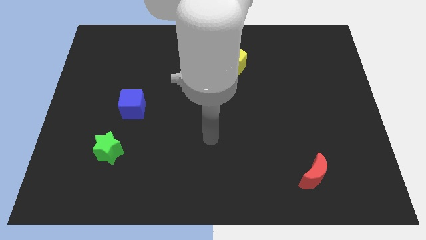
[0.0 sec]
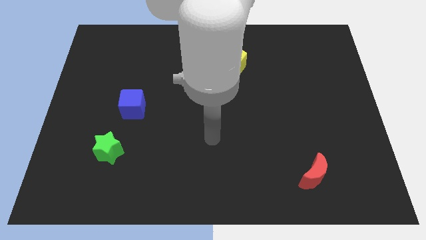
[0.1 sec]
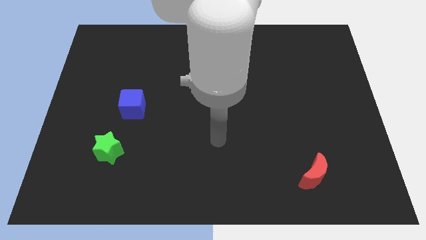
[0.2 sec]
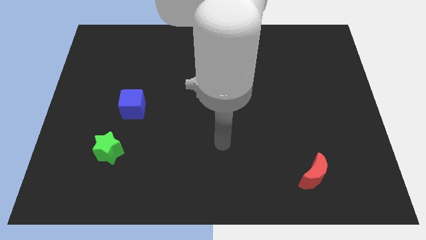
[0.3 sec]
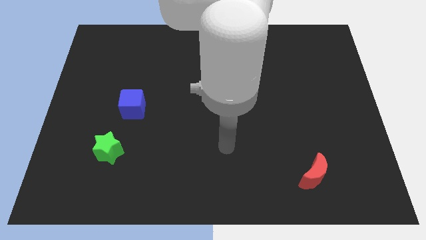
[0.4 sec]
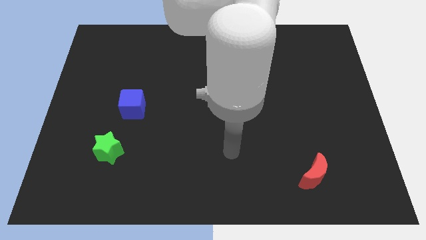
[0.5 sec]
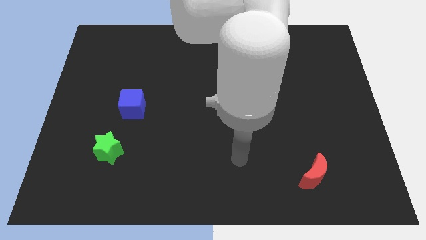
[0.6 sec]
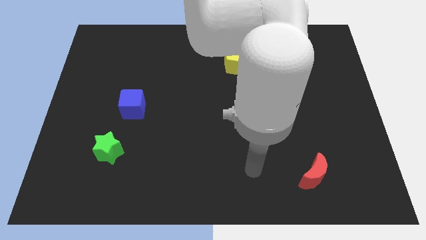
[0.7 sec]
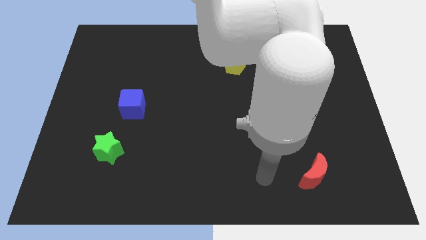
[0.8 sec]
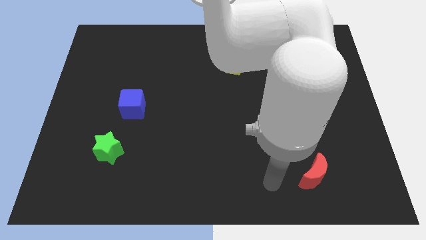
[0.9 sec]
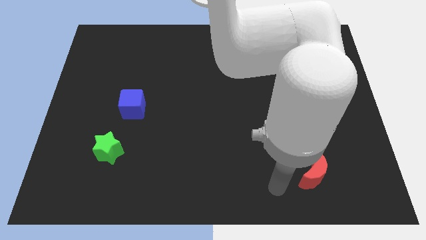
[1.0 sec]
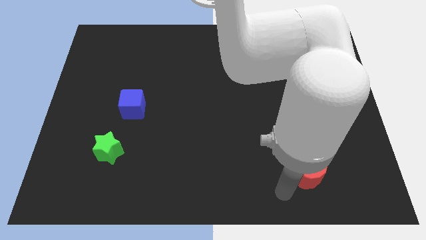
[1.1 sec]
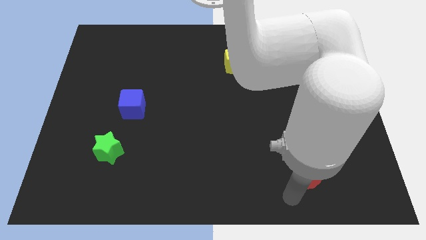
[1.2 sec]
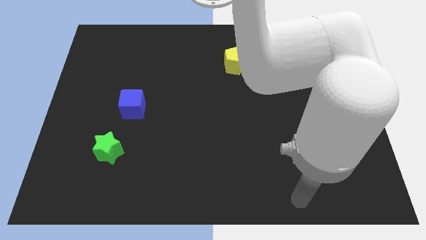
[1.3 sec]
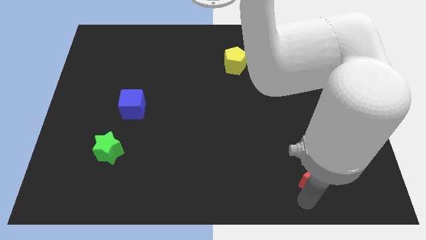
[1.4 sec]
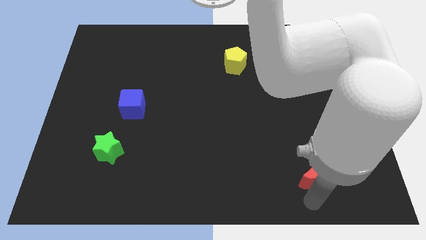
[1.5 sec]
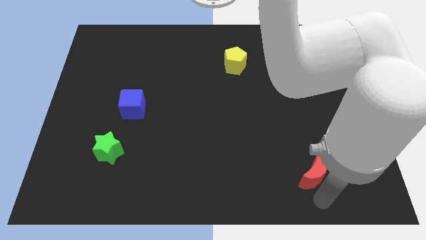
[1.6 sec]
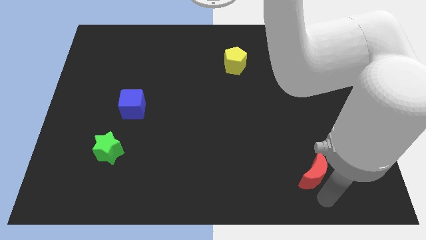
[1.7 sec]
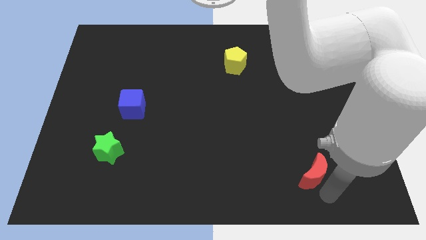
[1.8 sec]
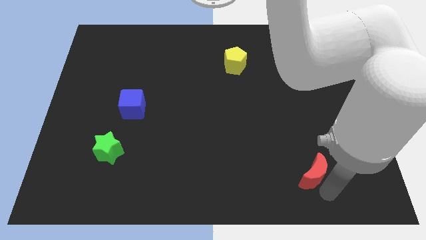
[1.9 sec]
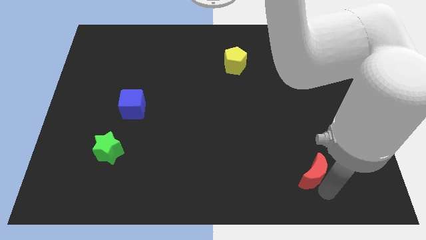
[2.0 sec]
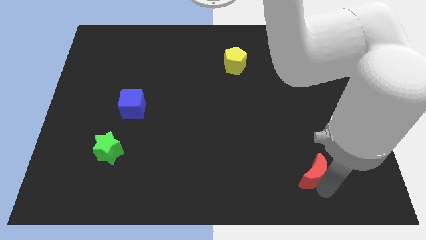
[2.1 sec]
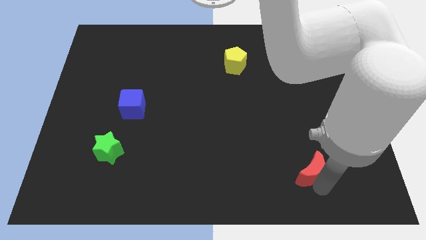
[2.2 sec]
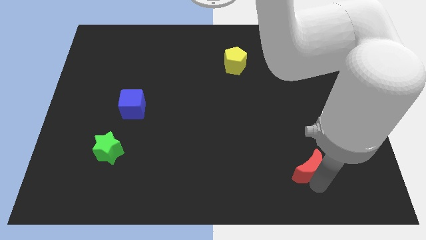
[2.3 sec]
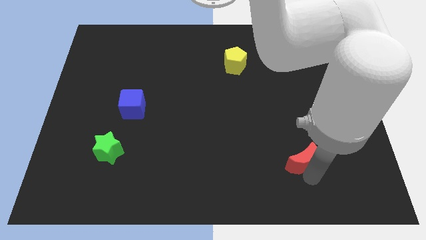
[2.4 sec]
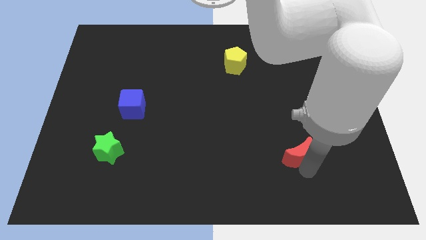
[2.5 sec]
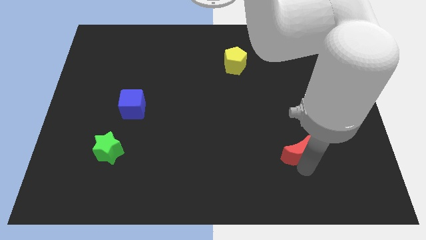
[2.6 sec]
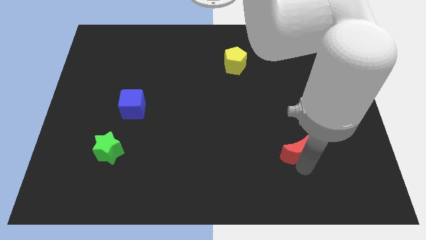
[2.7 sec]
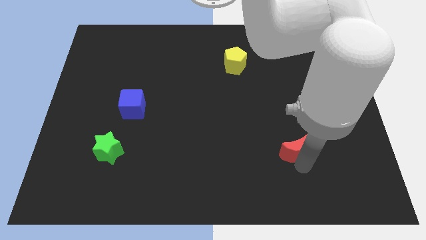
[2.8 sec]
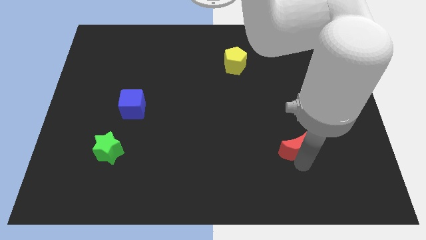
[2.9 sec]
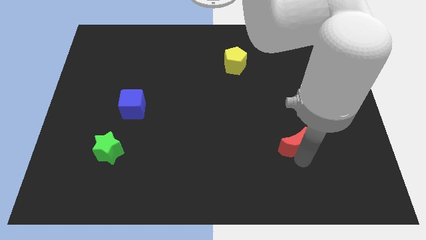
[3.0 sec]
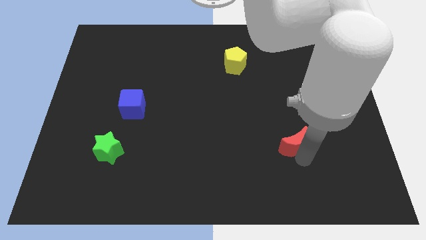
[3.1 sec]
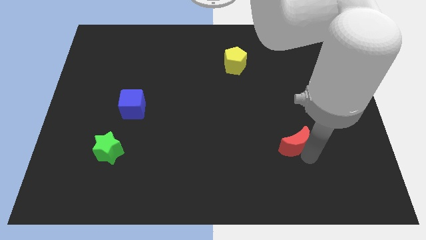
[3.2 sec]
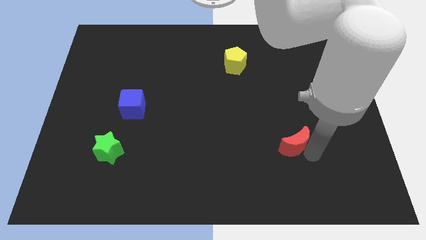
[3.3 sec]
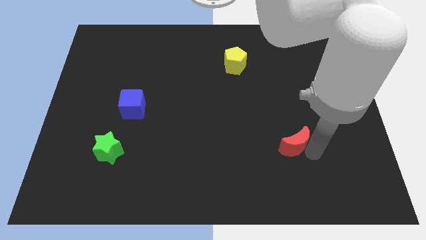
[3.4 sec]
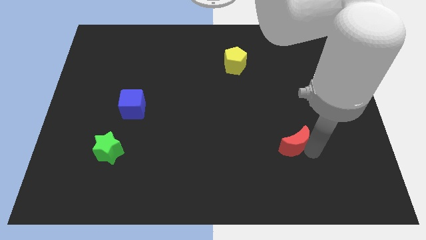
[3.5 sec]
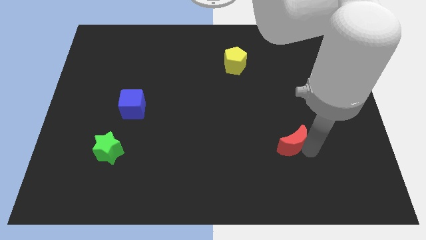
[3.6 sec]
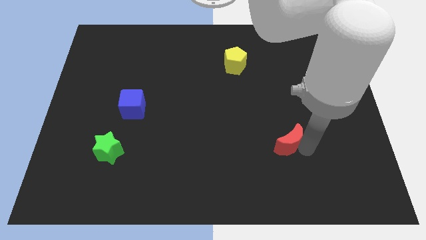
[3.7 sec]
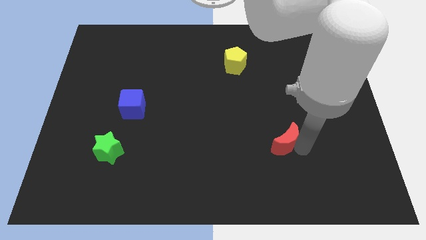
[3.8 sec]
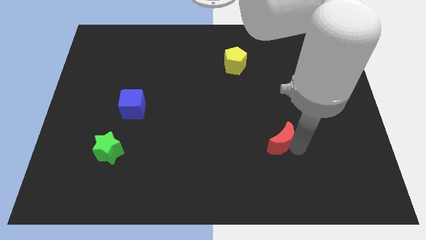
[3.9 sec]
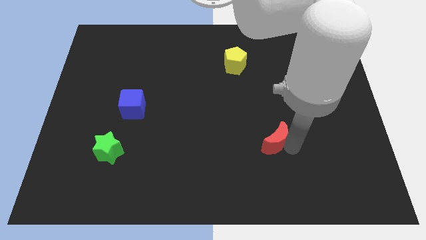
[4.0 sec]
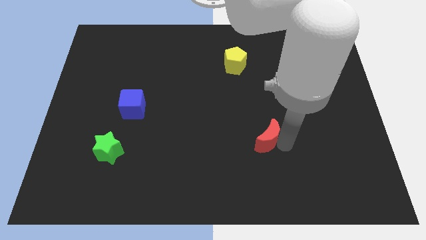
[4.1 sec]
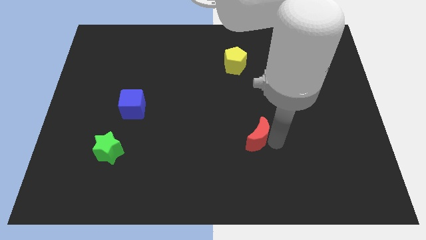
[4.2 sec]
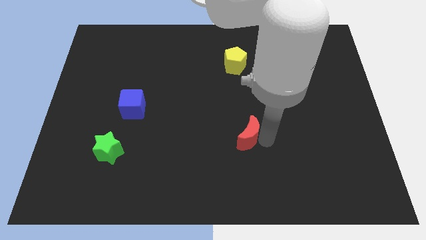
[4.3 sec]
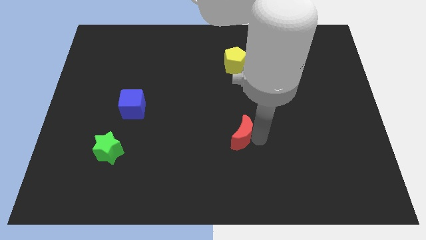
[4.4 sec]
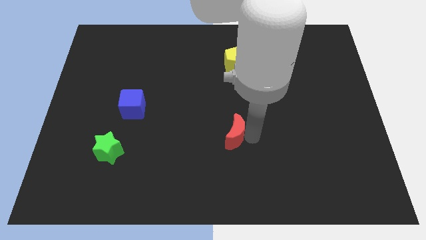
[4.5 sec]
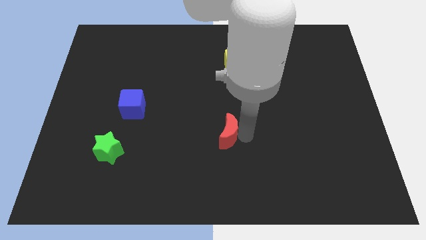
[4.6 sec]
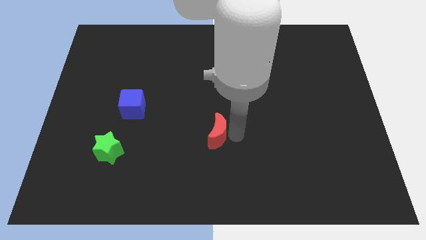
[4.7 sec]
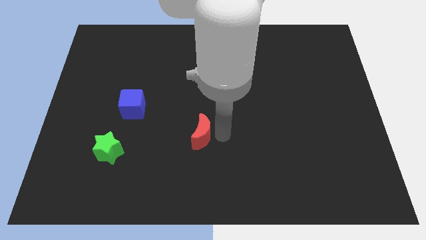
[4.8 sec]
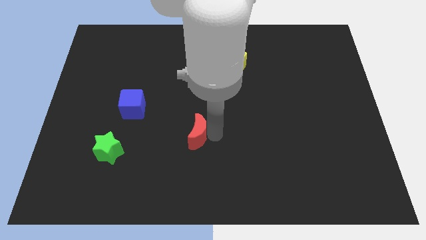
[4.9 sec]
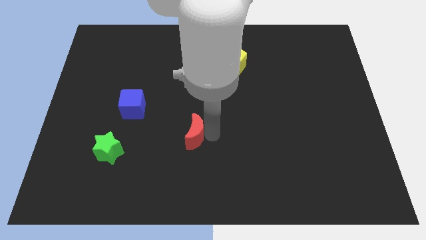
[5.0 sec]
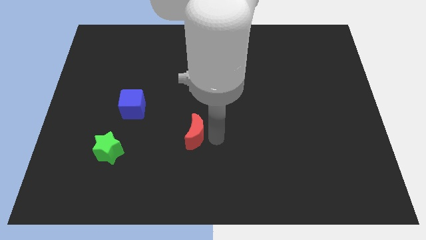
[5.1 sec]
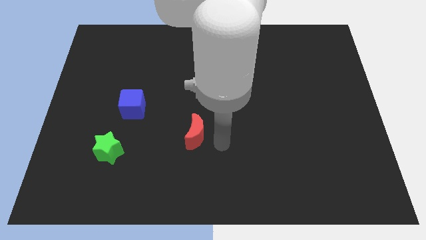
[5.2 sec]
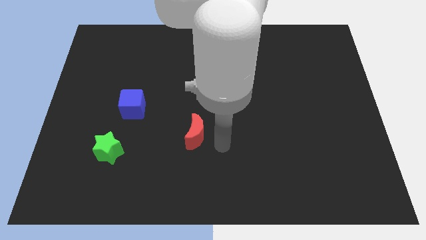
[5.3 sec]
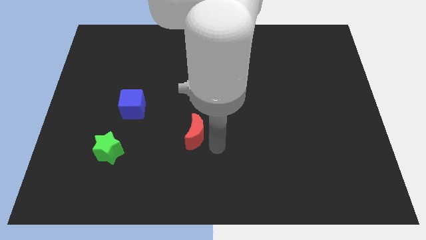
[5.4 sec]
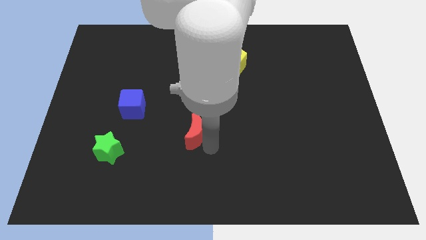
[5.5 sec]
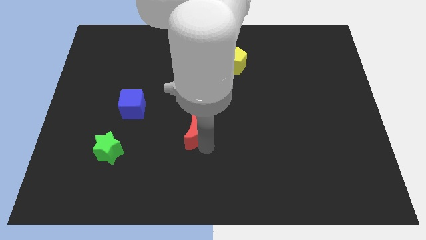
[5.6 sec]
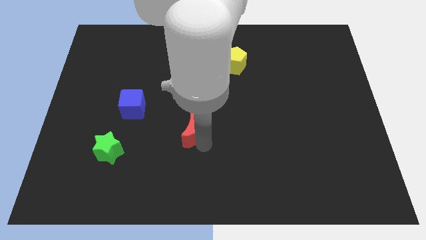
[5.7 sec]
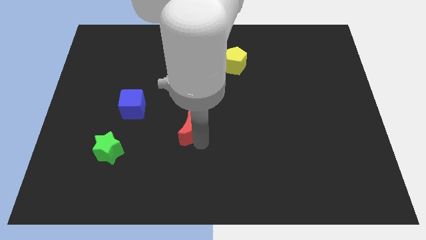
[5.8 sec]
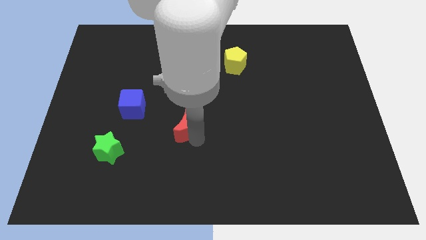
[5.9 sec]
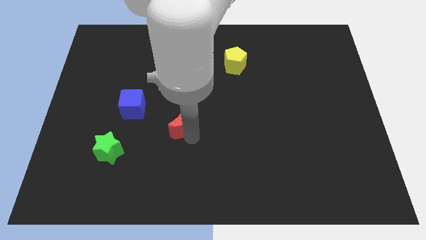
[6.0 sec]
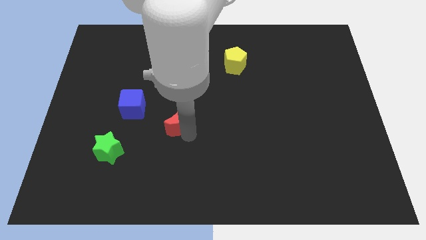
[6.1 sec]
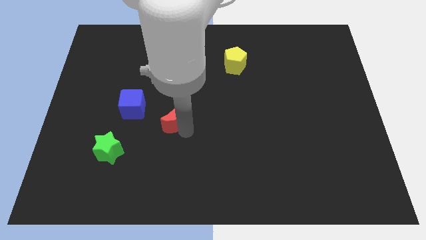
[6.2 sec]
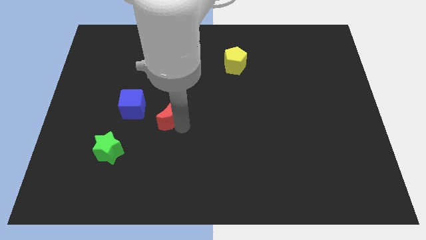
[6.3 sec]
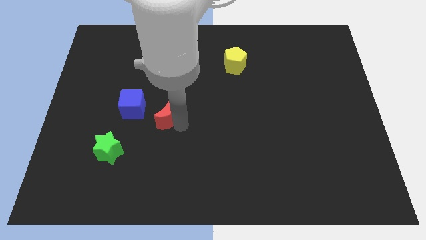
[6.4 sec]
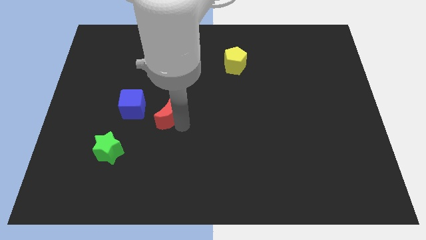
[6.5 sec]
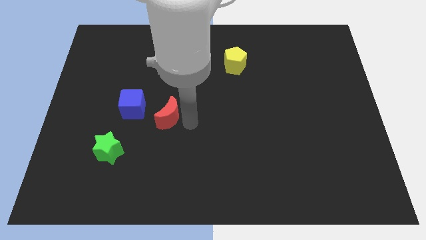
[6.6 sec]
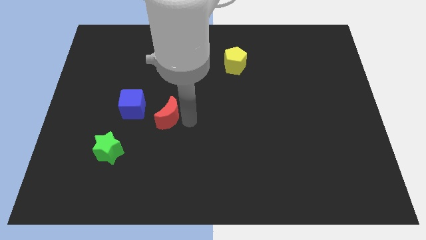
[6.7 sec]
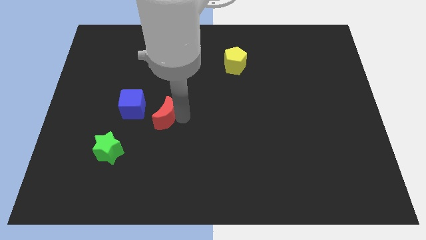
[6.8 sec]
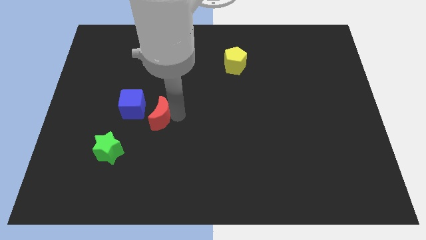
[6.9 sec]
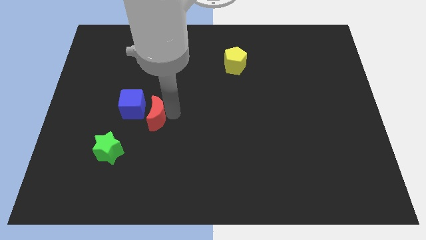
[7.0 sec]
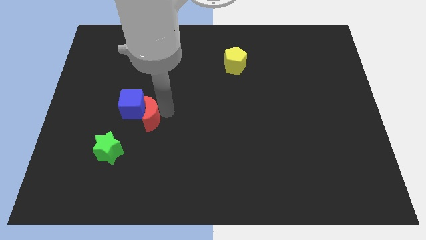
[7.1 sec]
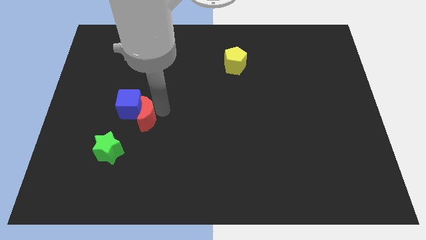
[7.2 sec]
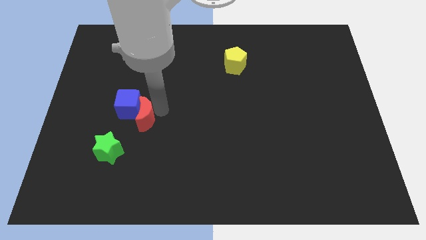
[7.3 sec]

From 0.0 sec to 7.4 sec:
put the red moon next to the cube

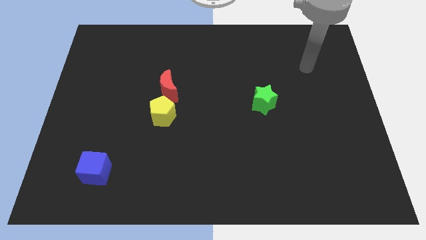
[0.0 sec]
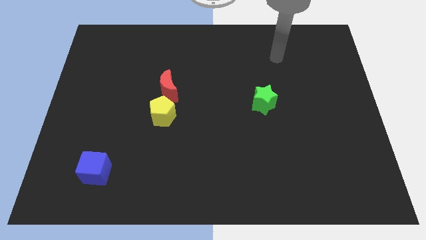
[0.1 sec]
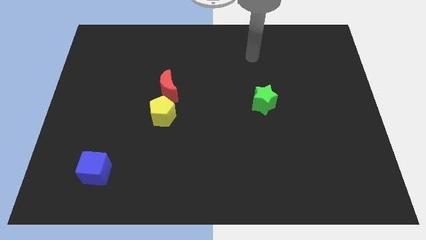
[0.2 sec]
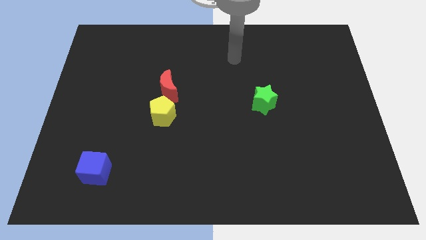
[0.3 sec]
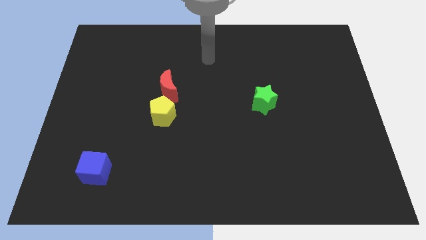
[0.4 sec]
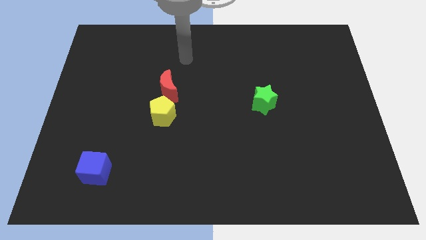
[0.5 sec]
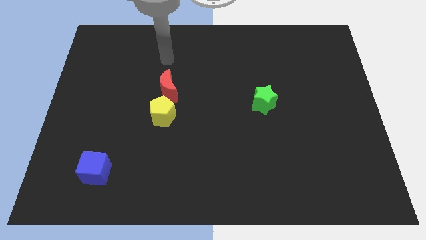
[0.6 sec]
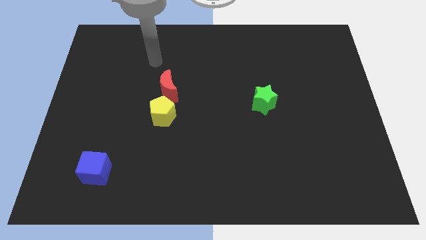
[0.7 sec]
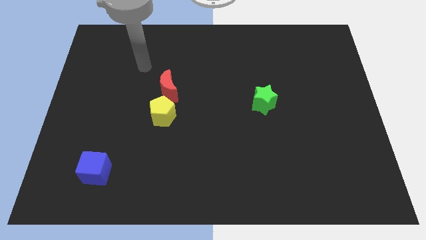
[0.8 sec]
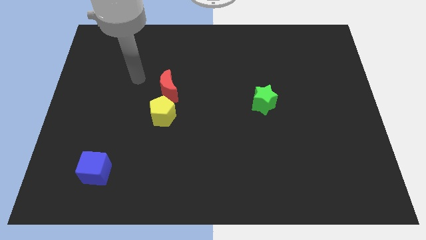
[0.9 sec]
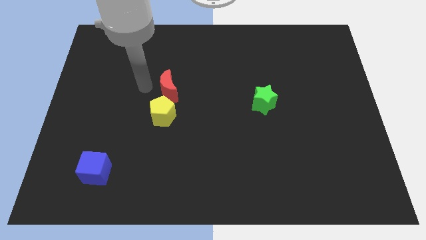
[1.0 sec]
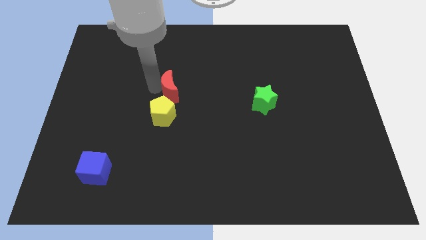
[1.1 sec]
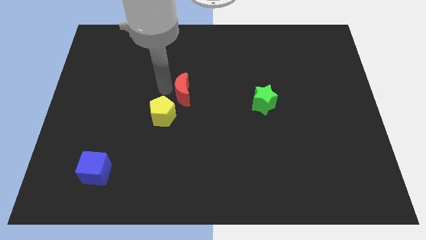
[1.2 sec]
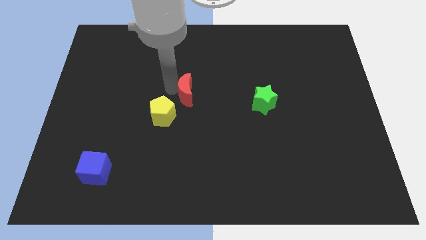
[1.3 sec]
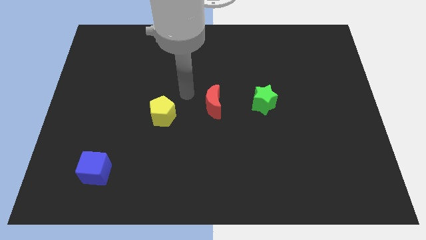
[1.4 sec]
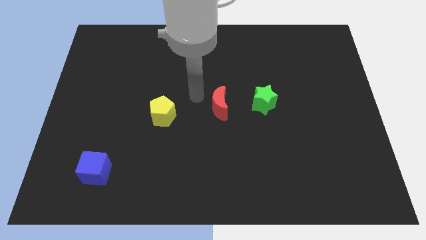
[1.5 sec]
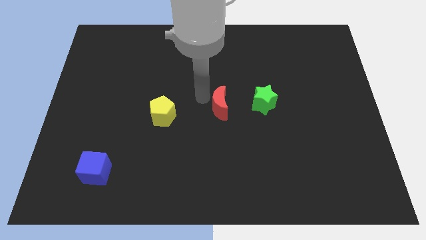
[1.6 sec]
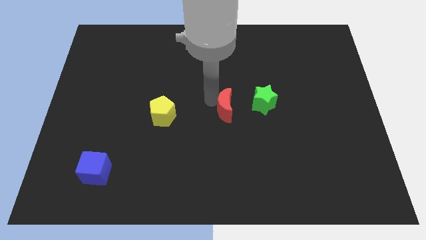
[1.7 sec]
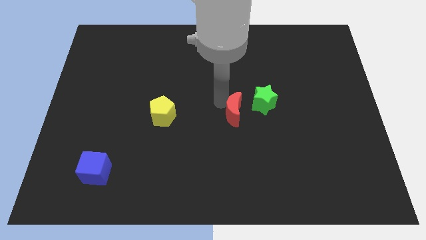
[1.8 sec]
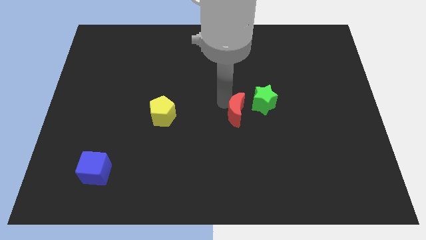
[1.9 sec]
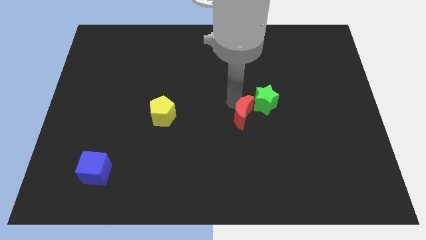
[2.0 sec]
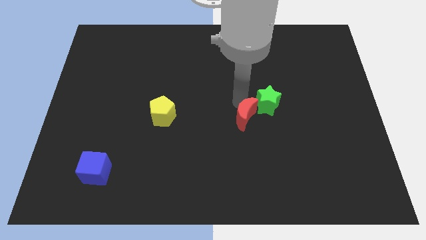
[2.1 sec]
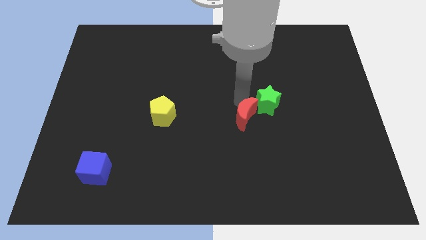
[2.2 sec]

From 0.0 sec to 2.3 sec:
push the red block next to the green star
